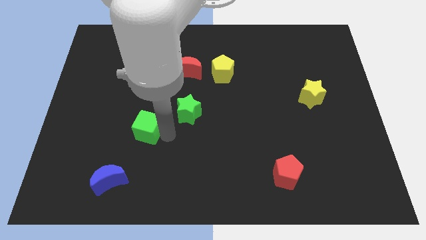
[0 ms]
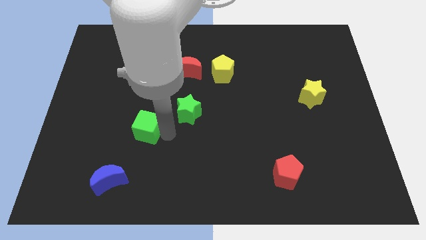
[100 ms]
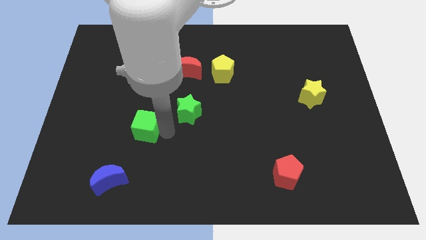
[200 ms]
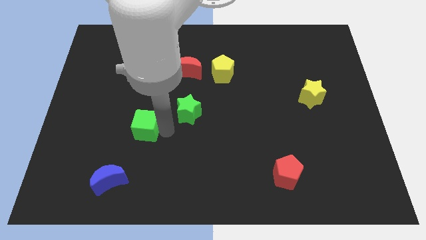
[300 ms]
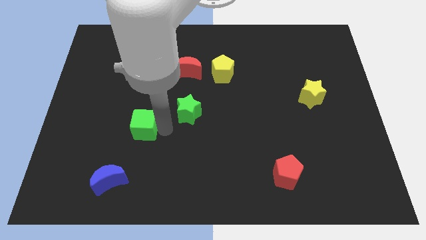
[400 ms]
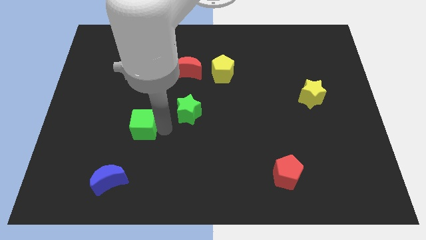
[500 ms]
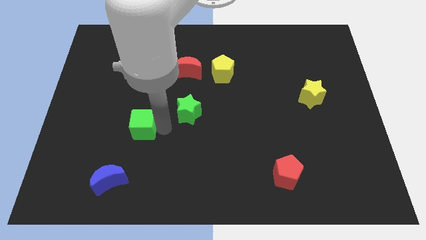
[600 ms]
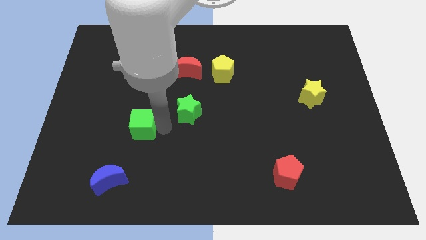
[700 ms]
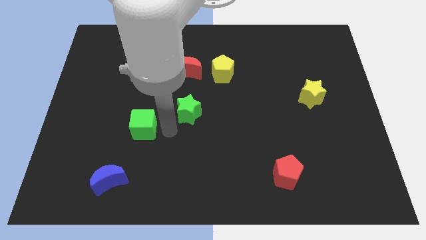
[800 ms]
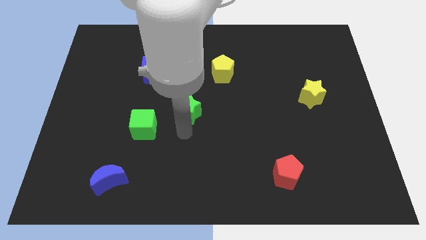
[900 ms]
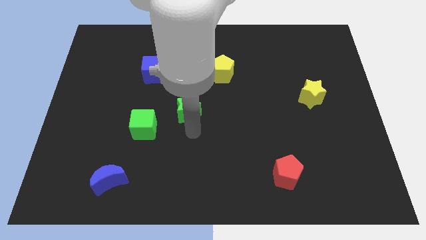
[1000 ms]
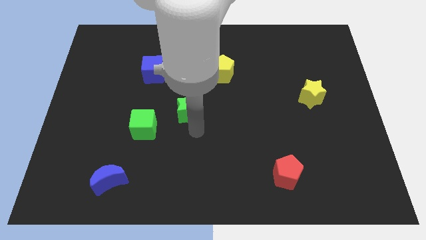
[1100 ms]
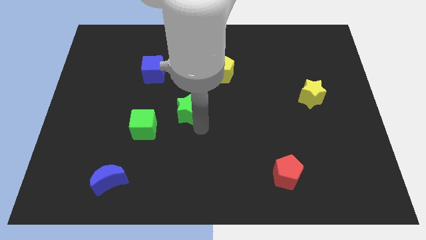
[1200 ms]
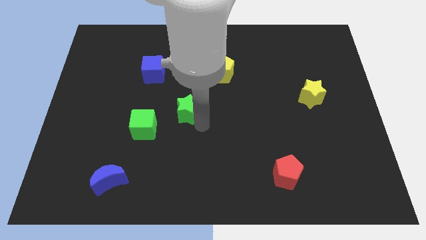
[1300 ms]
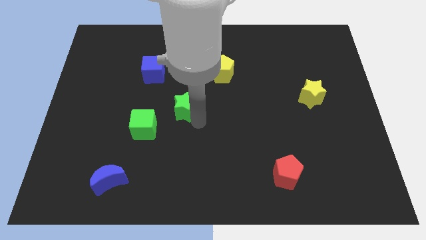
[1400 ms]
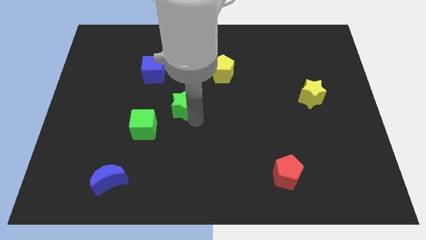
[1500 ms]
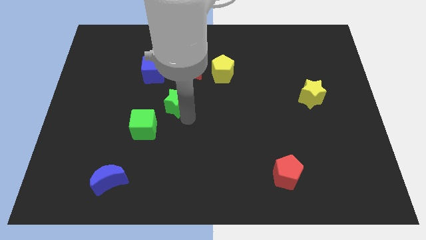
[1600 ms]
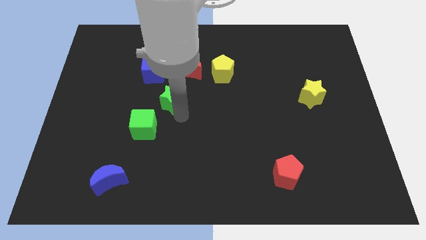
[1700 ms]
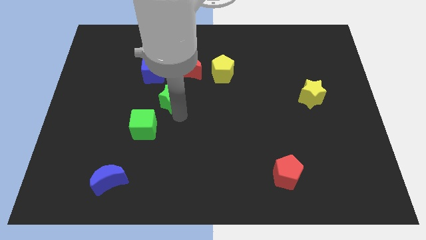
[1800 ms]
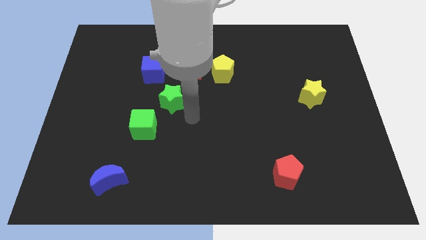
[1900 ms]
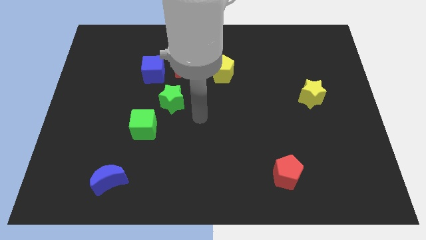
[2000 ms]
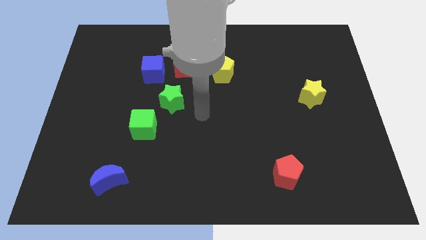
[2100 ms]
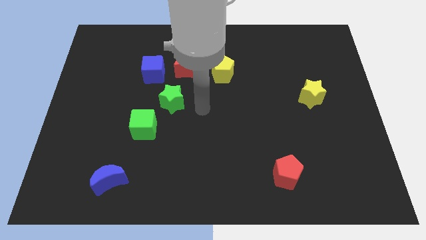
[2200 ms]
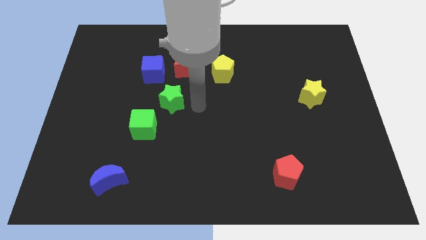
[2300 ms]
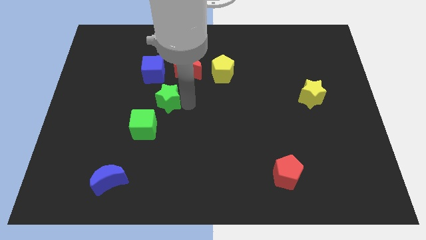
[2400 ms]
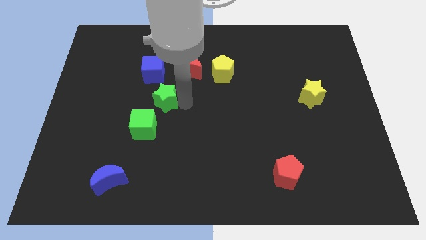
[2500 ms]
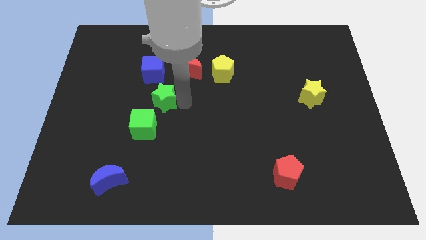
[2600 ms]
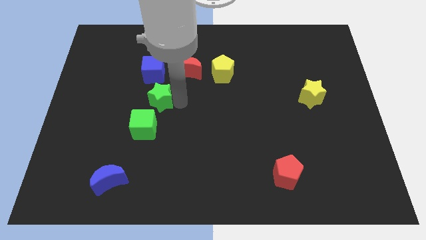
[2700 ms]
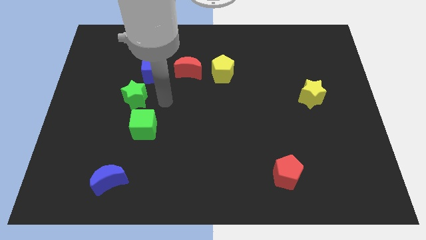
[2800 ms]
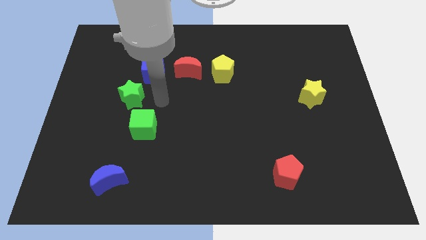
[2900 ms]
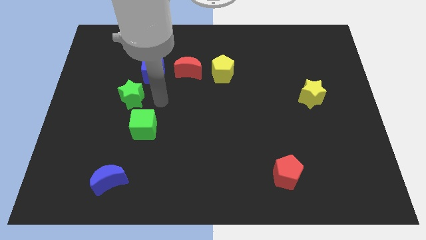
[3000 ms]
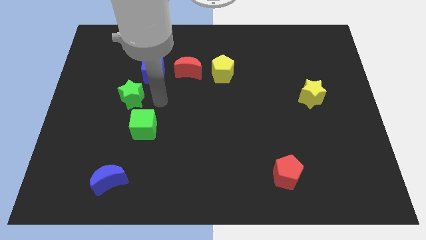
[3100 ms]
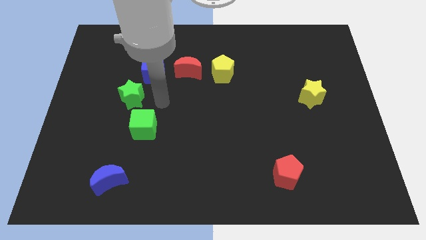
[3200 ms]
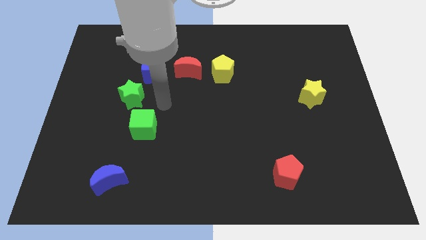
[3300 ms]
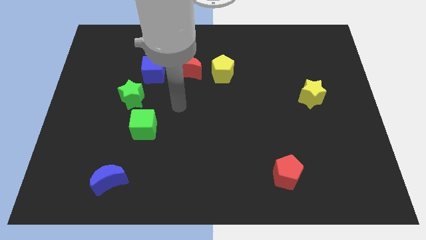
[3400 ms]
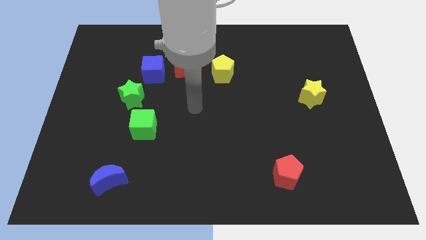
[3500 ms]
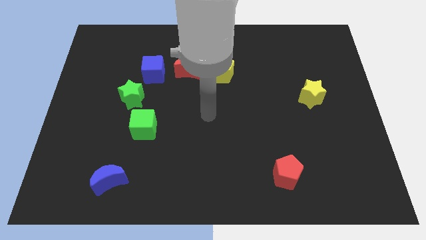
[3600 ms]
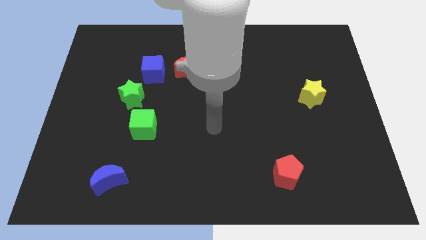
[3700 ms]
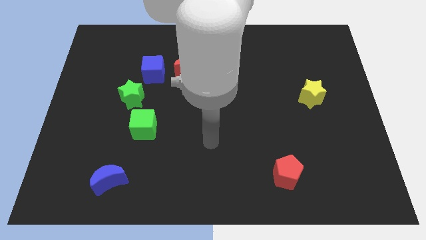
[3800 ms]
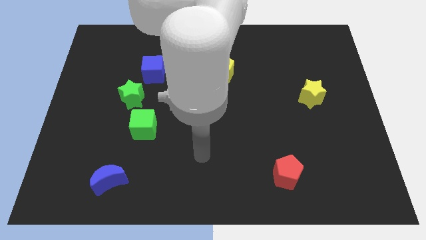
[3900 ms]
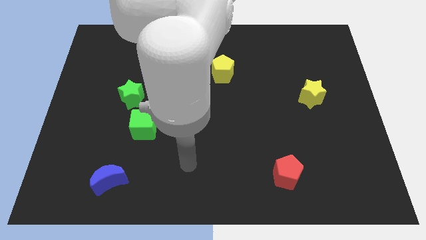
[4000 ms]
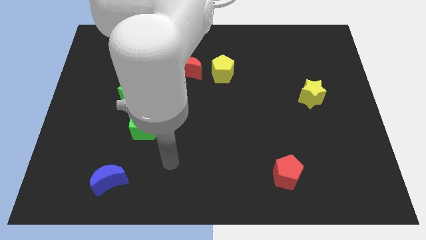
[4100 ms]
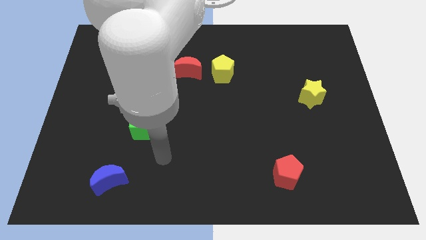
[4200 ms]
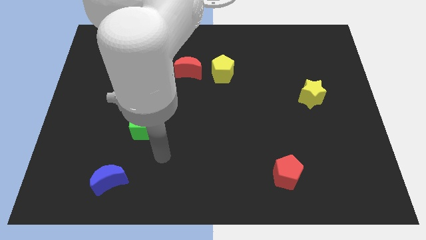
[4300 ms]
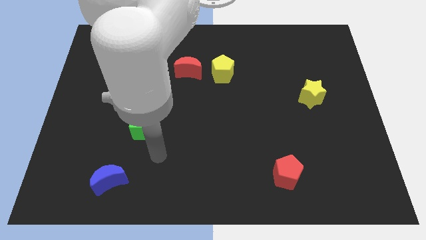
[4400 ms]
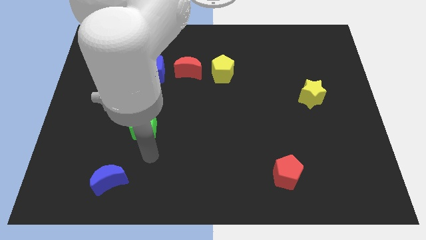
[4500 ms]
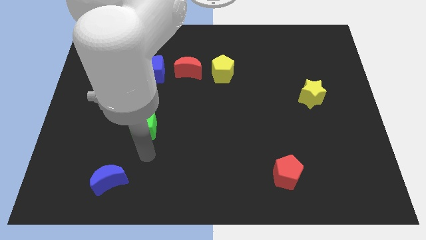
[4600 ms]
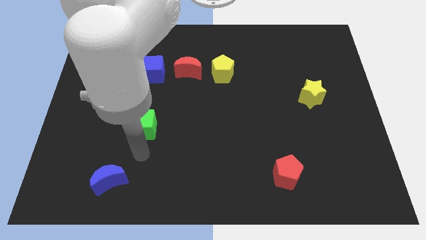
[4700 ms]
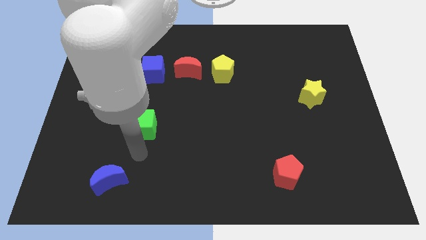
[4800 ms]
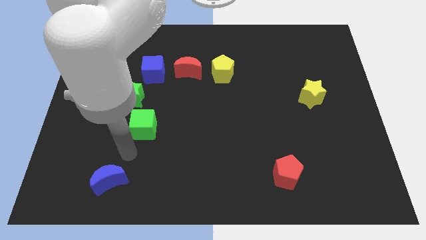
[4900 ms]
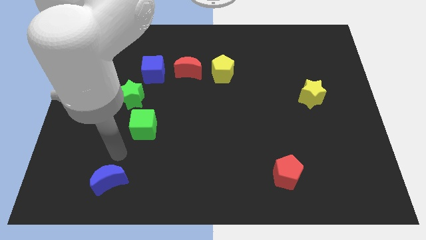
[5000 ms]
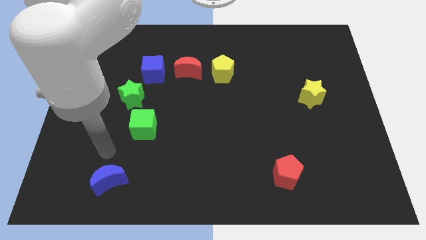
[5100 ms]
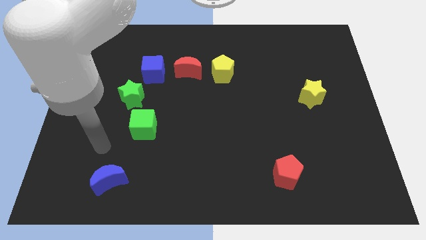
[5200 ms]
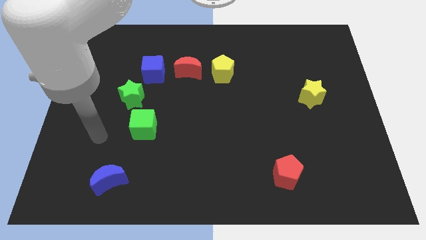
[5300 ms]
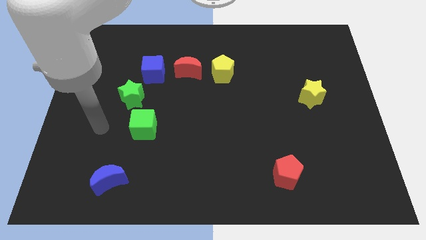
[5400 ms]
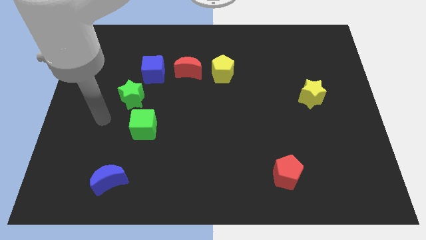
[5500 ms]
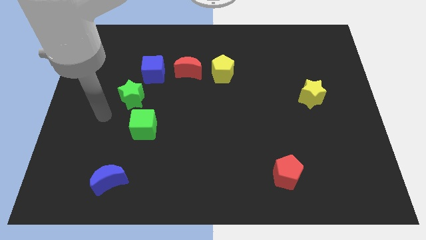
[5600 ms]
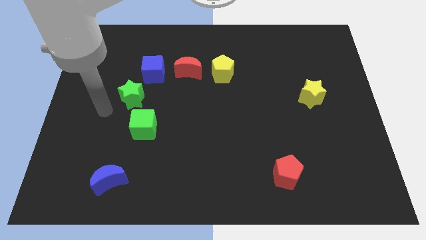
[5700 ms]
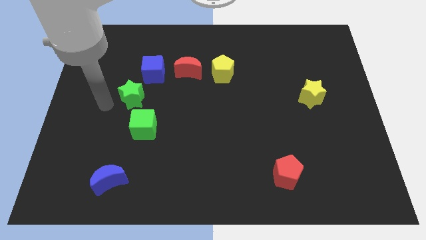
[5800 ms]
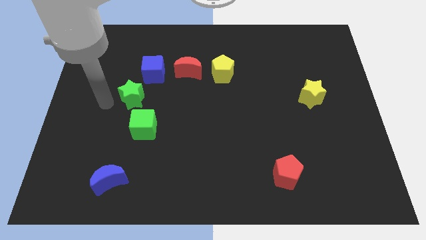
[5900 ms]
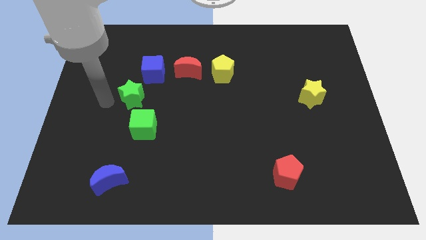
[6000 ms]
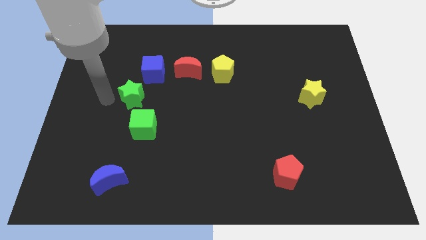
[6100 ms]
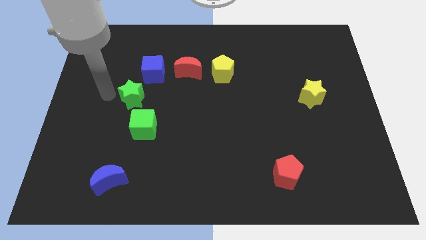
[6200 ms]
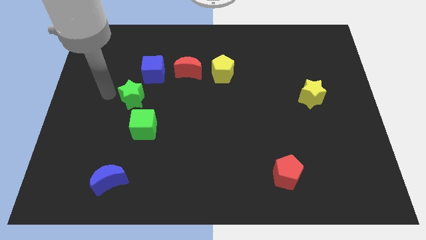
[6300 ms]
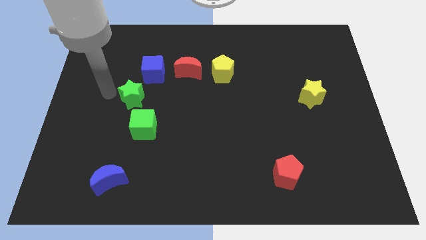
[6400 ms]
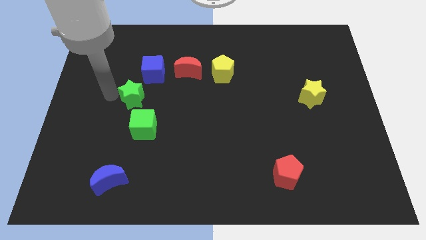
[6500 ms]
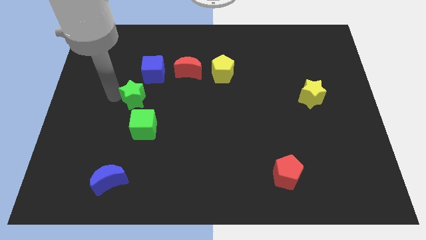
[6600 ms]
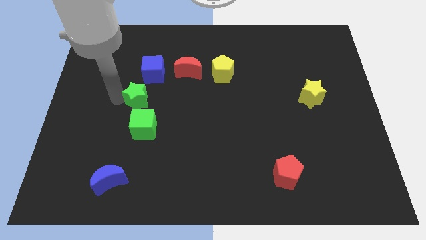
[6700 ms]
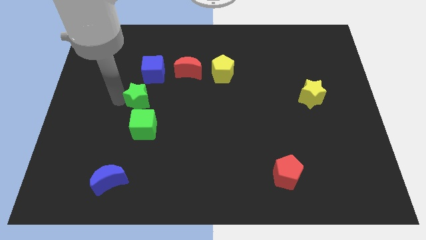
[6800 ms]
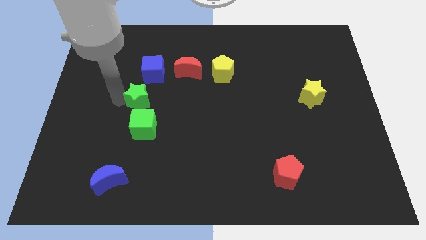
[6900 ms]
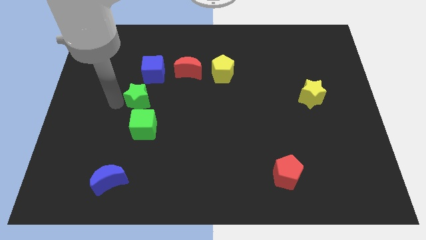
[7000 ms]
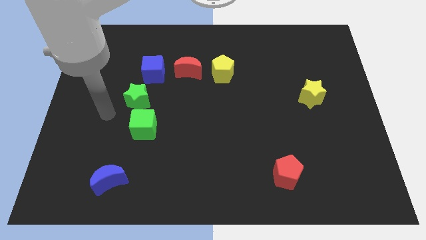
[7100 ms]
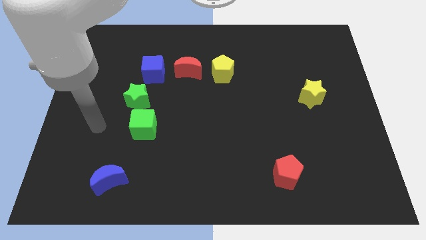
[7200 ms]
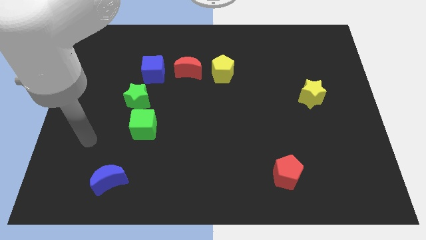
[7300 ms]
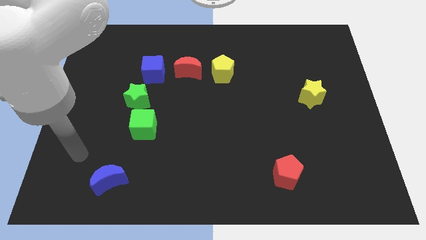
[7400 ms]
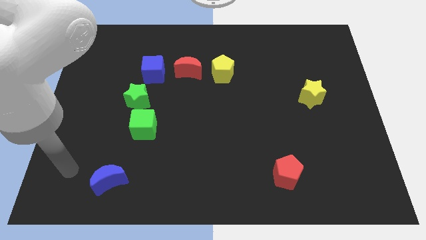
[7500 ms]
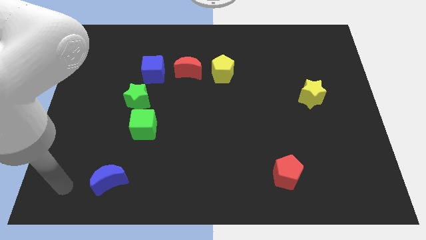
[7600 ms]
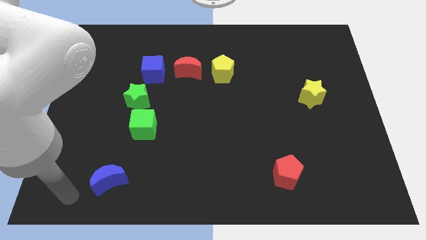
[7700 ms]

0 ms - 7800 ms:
move the green star above the green cube

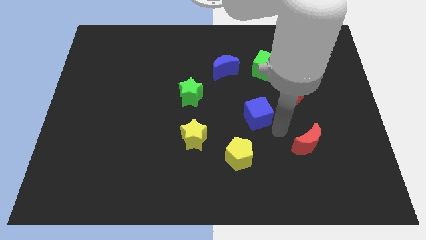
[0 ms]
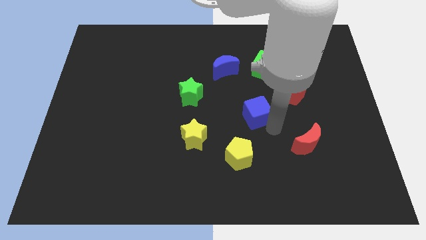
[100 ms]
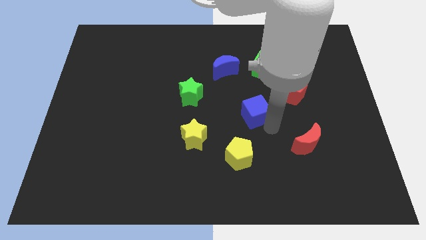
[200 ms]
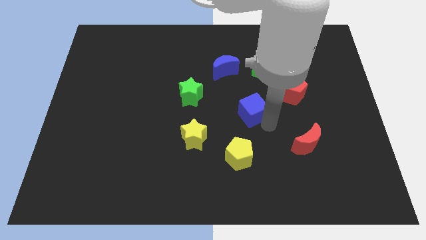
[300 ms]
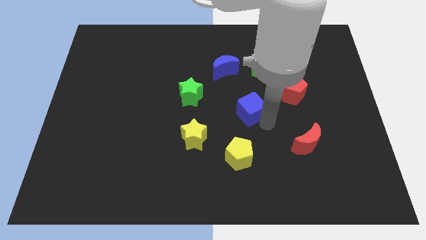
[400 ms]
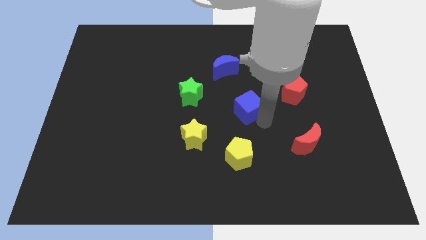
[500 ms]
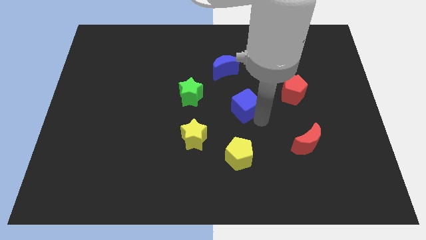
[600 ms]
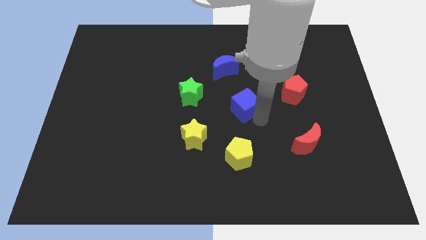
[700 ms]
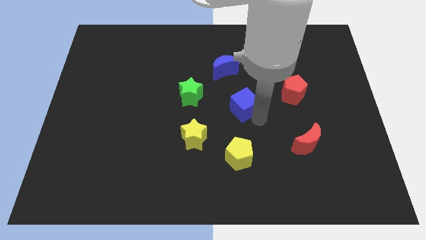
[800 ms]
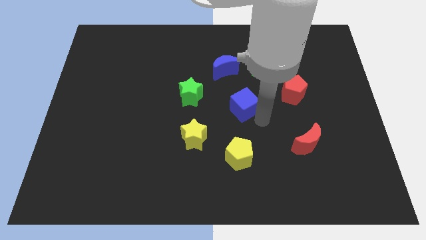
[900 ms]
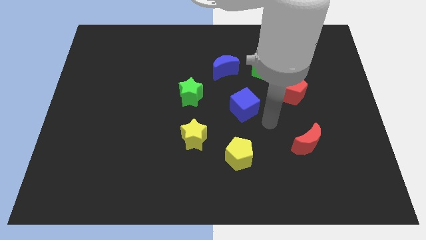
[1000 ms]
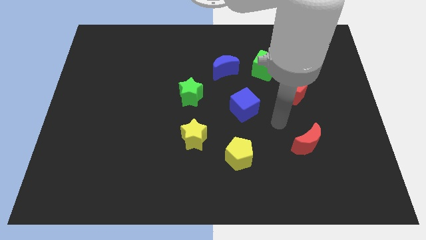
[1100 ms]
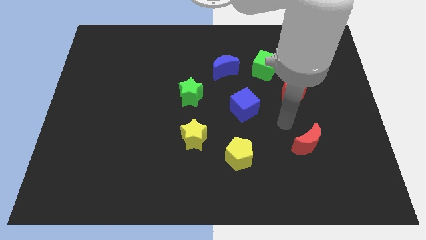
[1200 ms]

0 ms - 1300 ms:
push the blue cube to the center of the all blocks
